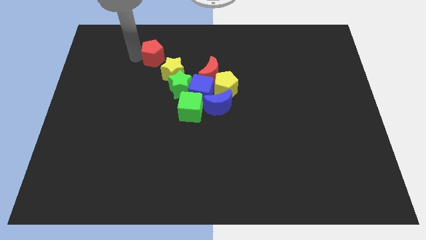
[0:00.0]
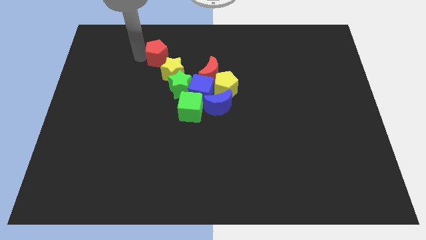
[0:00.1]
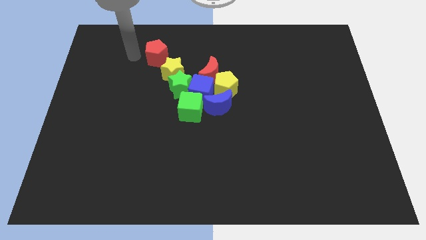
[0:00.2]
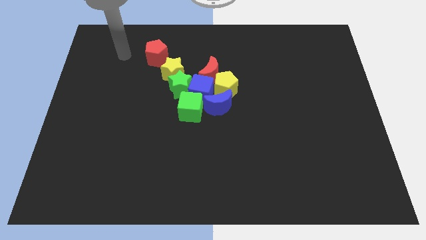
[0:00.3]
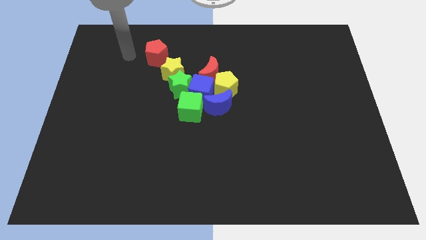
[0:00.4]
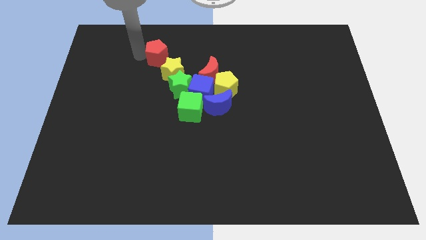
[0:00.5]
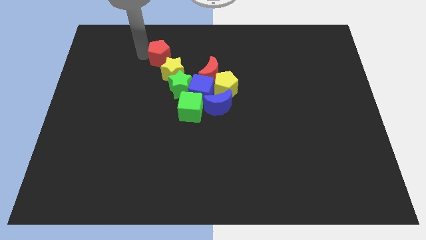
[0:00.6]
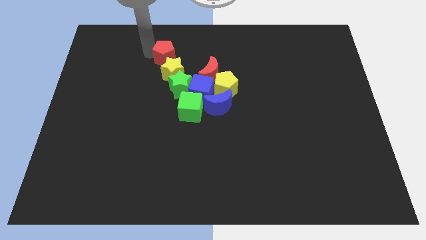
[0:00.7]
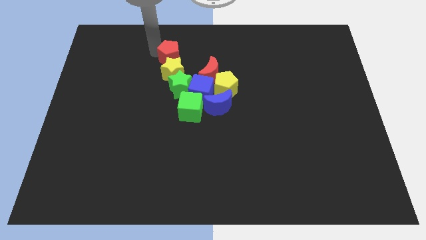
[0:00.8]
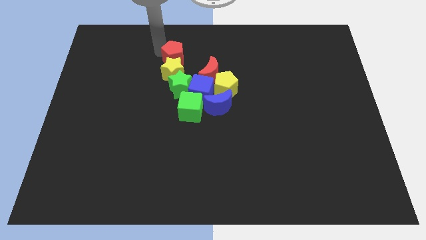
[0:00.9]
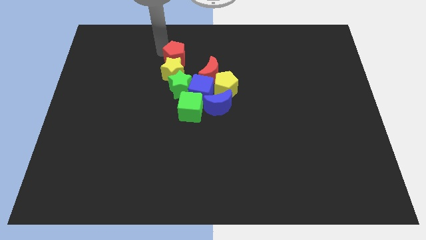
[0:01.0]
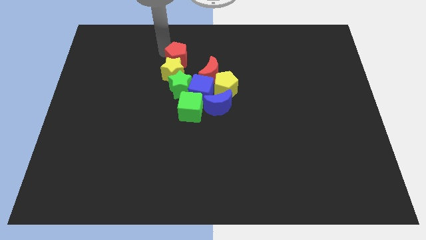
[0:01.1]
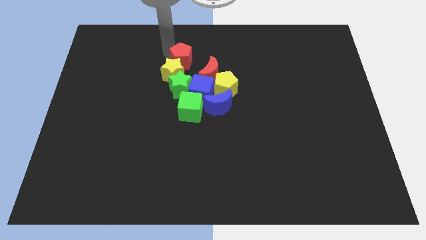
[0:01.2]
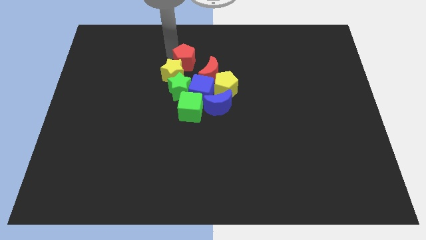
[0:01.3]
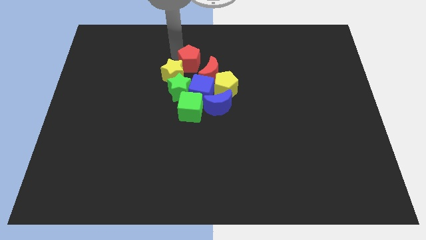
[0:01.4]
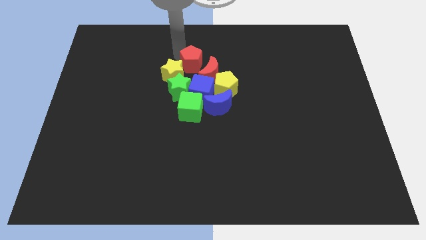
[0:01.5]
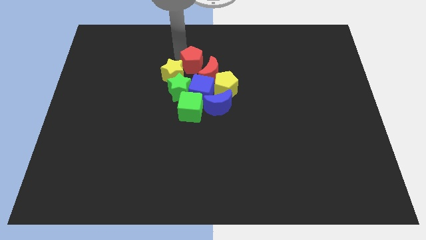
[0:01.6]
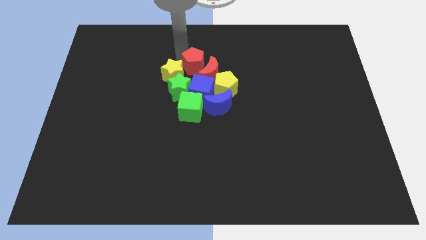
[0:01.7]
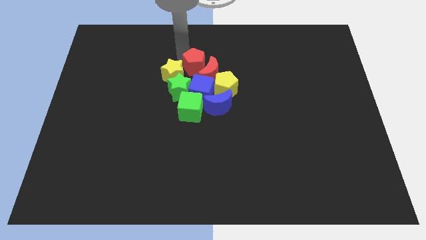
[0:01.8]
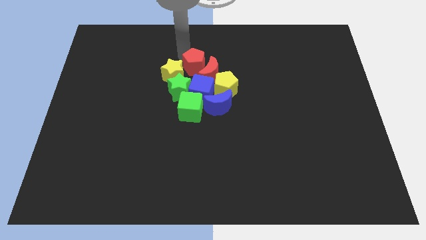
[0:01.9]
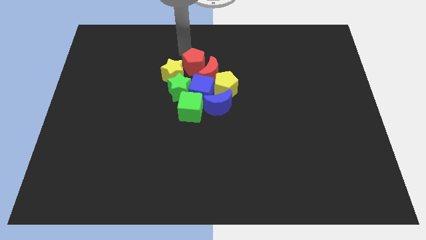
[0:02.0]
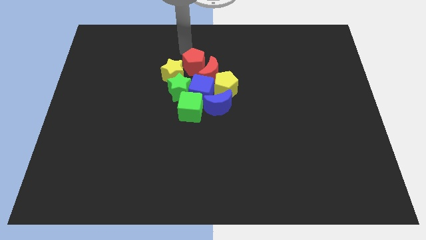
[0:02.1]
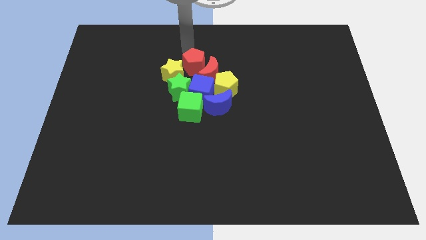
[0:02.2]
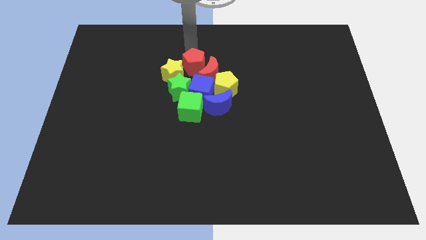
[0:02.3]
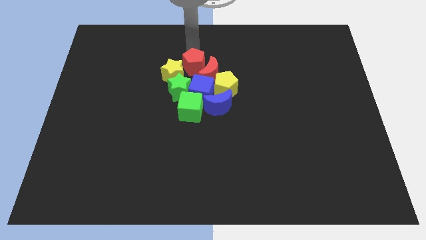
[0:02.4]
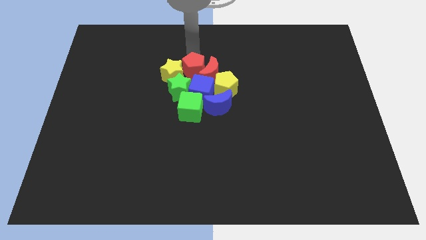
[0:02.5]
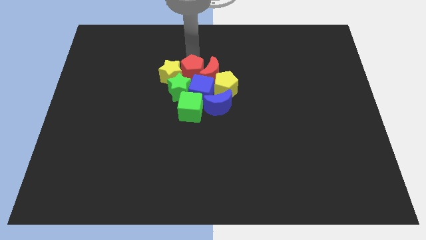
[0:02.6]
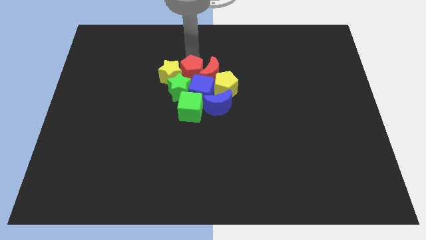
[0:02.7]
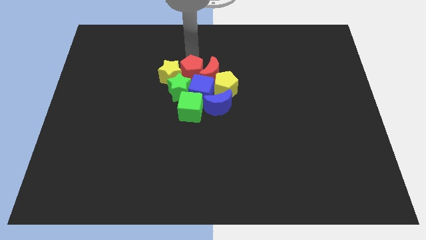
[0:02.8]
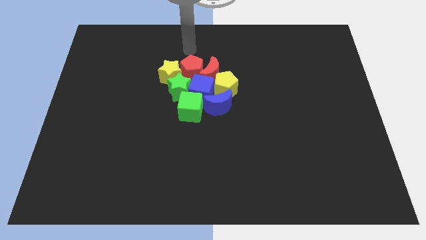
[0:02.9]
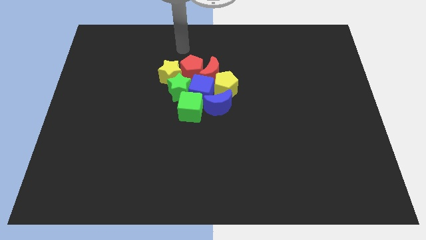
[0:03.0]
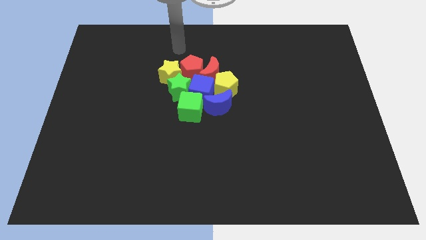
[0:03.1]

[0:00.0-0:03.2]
move the red pentagon to the right side of the yellow star

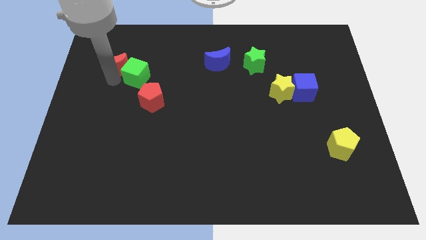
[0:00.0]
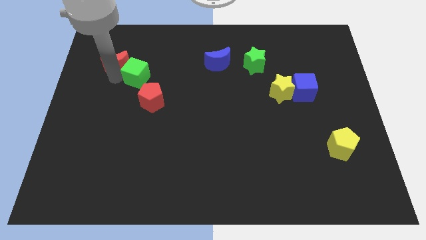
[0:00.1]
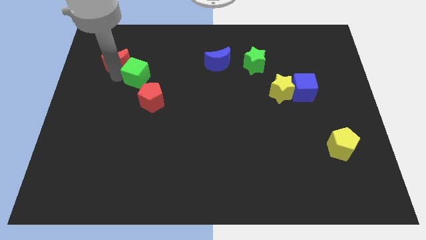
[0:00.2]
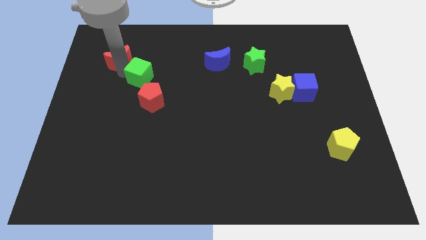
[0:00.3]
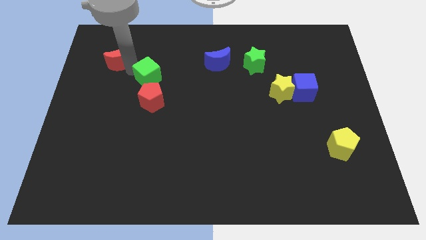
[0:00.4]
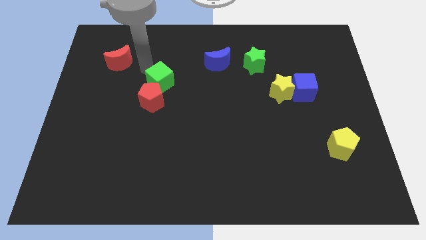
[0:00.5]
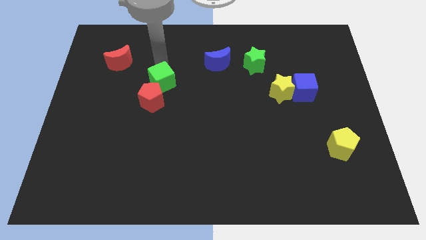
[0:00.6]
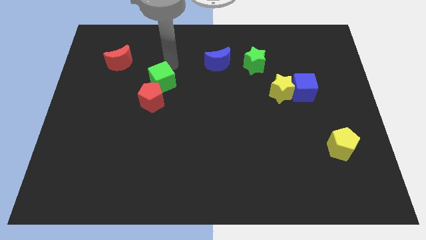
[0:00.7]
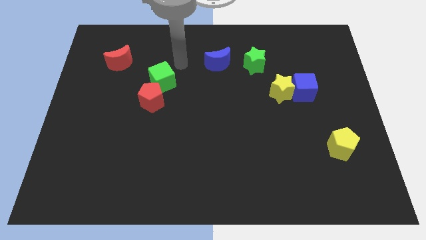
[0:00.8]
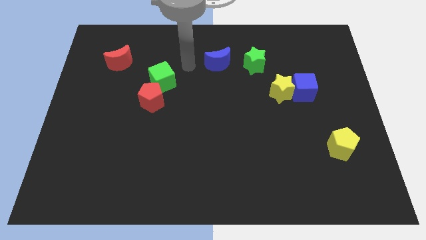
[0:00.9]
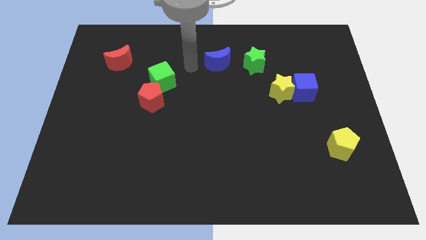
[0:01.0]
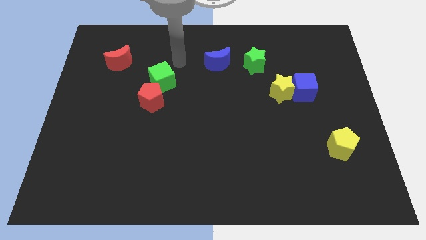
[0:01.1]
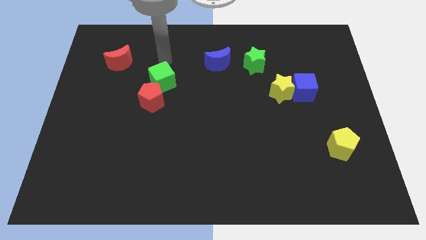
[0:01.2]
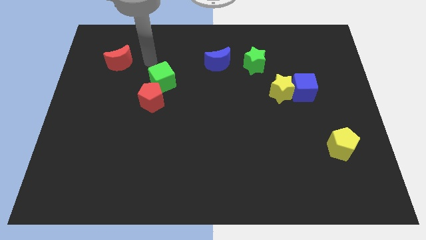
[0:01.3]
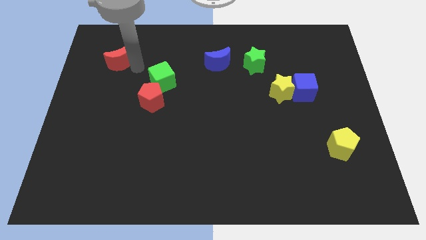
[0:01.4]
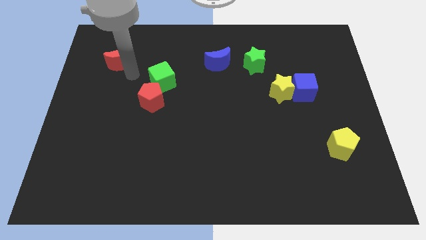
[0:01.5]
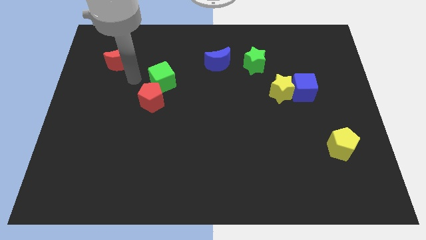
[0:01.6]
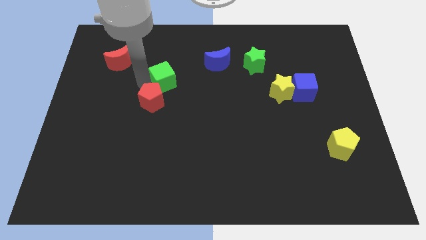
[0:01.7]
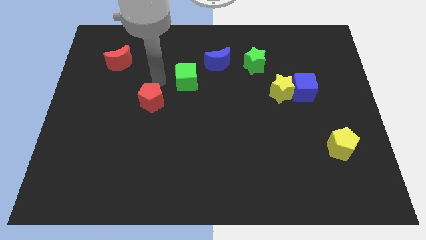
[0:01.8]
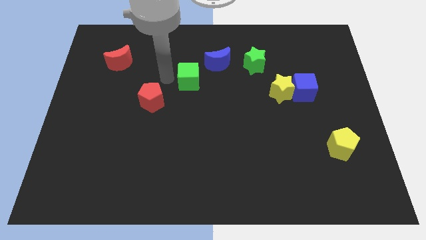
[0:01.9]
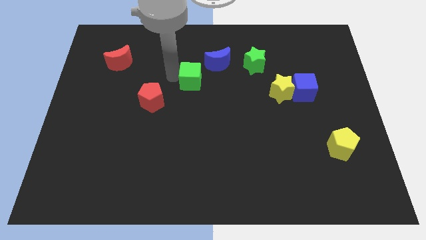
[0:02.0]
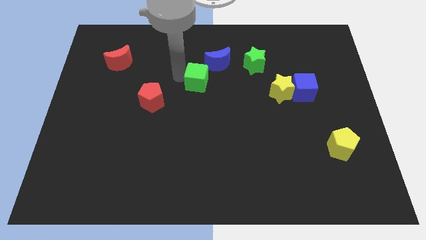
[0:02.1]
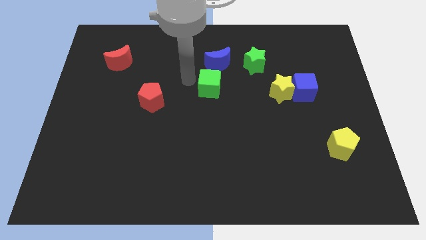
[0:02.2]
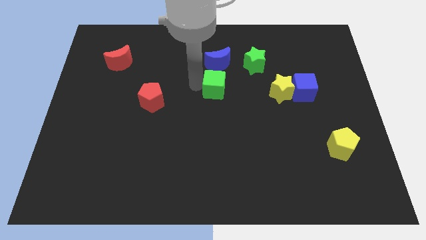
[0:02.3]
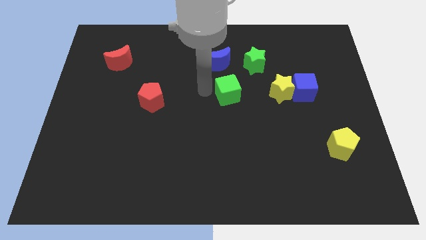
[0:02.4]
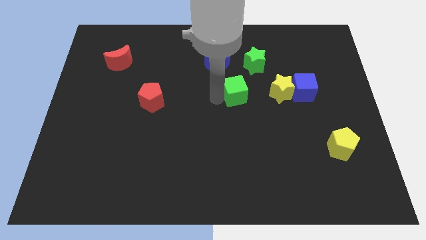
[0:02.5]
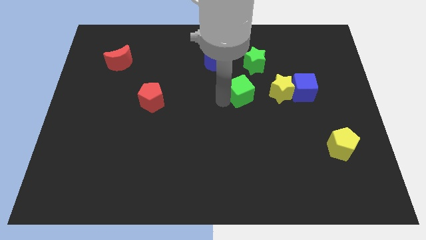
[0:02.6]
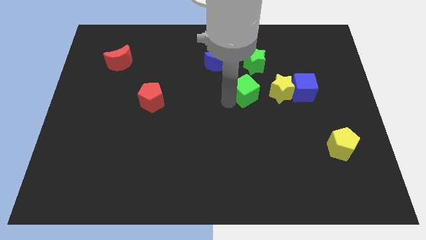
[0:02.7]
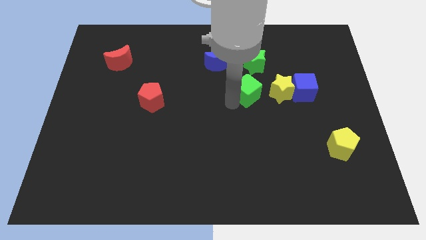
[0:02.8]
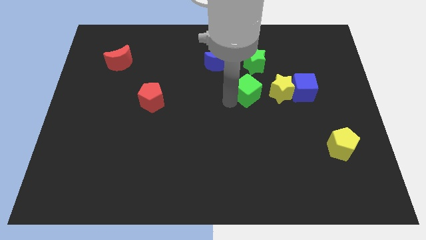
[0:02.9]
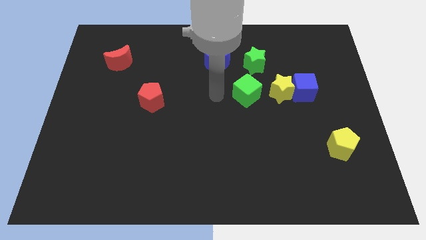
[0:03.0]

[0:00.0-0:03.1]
place the green cube on the left side of yellow star

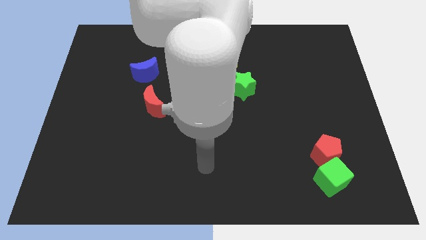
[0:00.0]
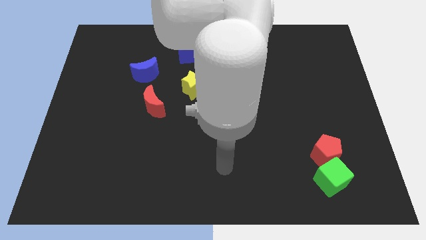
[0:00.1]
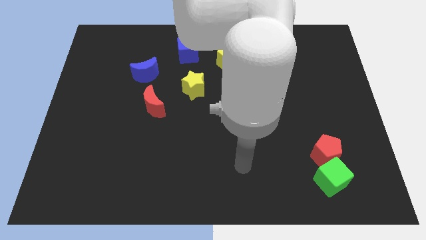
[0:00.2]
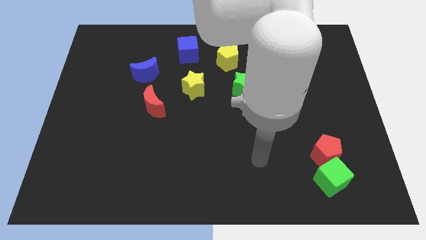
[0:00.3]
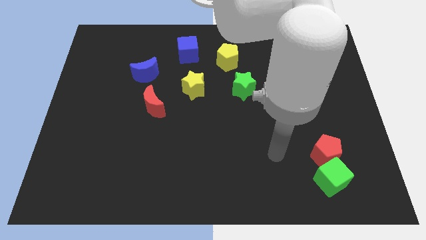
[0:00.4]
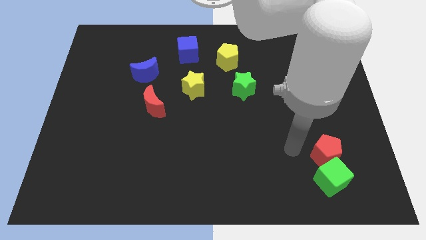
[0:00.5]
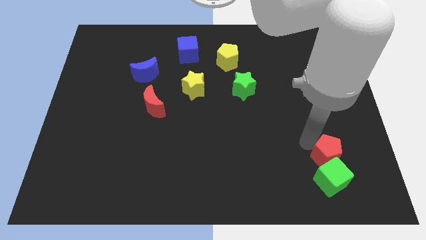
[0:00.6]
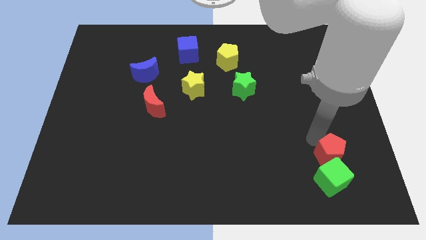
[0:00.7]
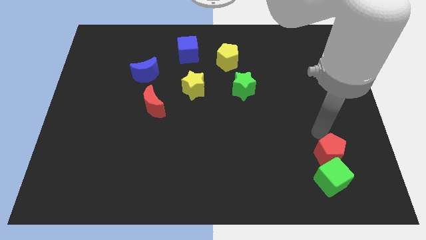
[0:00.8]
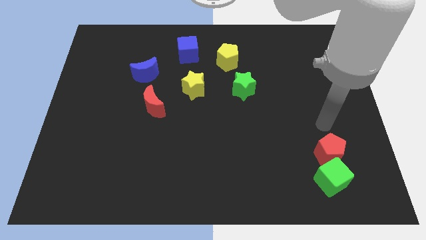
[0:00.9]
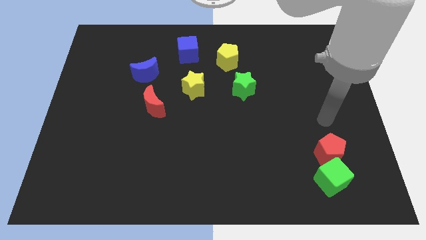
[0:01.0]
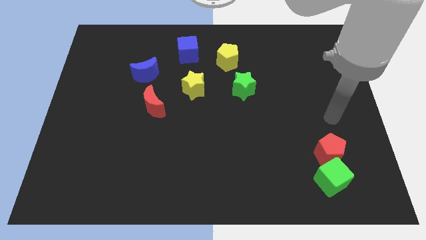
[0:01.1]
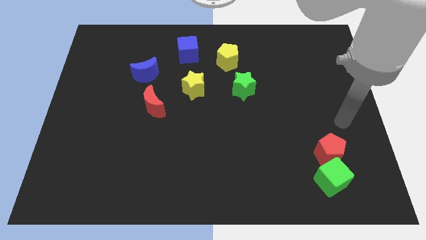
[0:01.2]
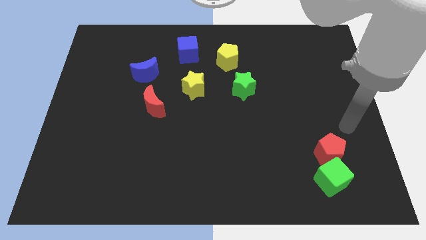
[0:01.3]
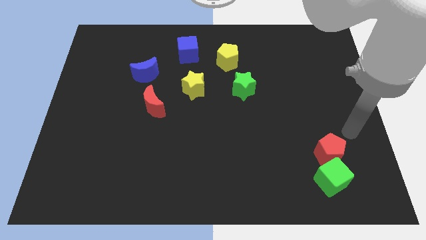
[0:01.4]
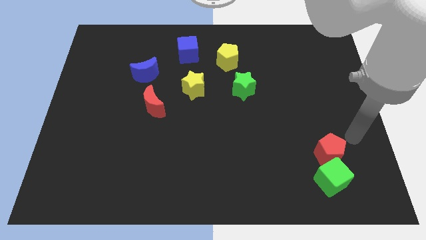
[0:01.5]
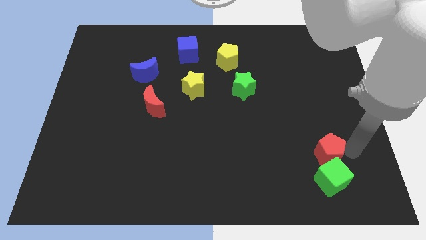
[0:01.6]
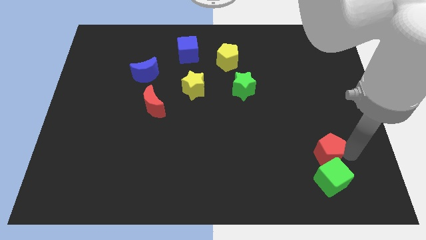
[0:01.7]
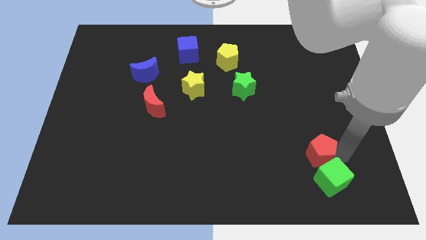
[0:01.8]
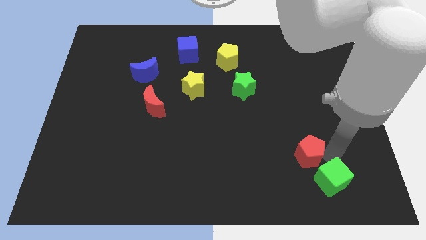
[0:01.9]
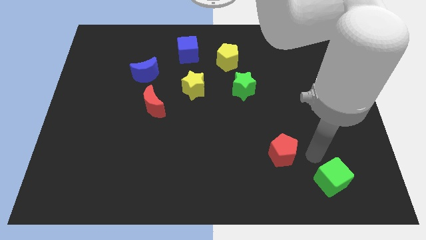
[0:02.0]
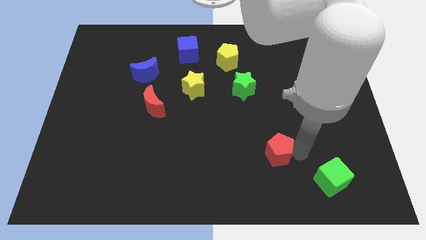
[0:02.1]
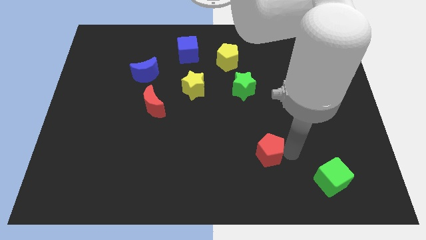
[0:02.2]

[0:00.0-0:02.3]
separate the red pentagon from the green cube

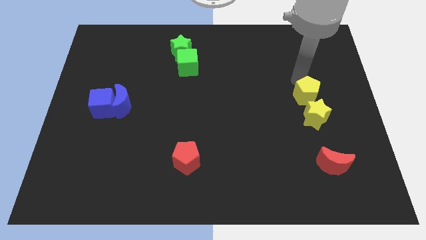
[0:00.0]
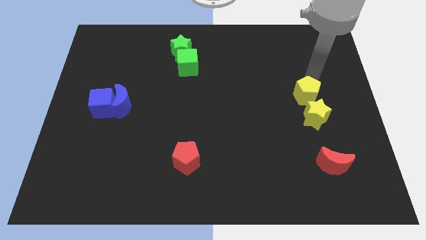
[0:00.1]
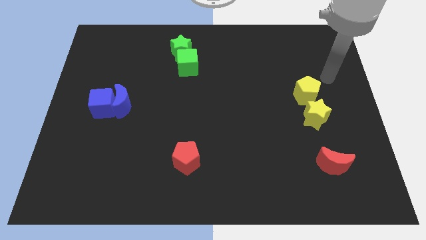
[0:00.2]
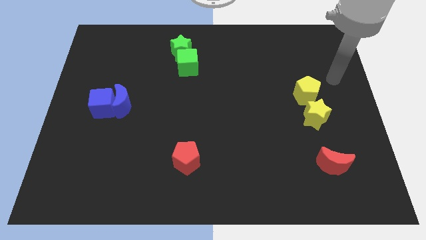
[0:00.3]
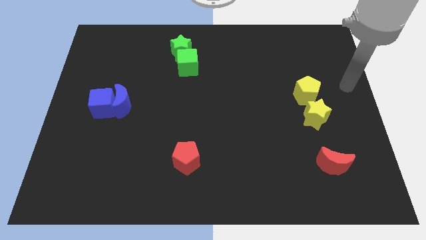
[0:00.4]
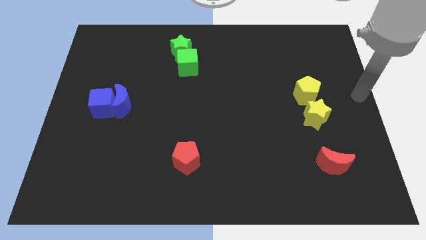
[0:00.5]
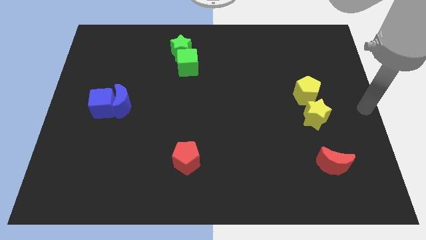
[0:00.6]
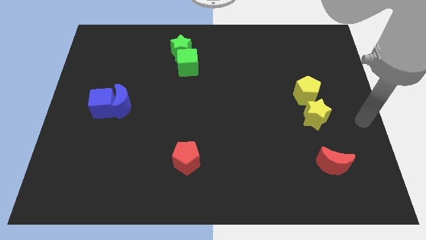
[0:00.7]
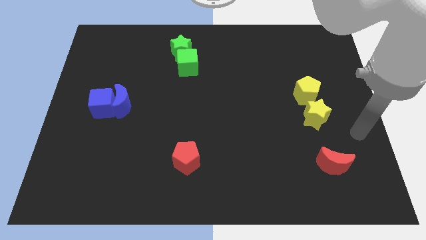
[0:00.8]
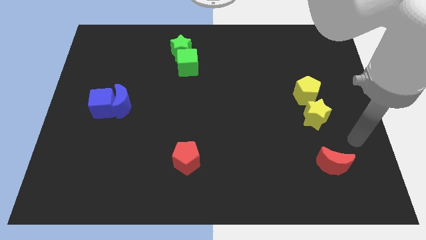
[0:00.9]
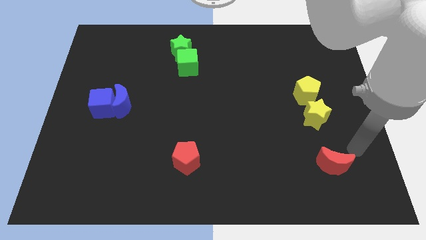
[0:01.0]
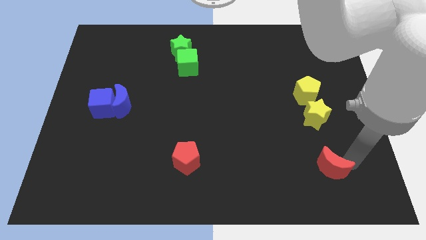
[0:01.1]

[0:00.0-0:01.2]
slide your arm on top right of red moon
